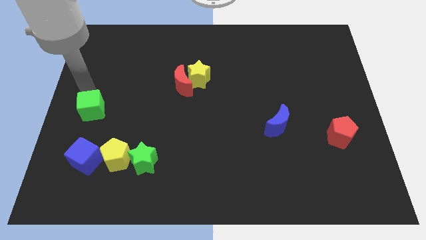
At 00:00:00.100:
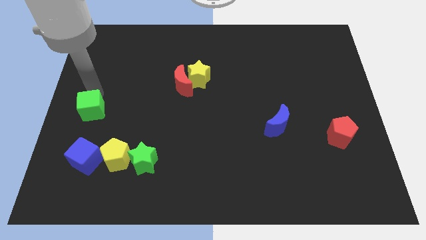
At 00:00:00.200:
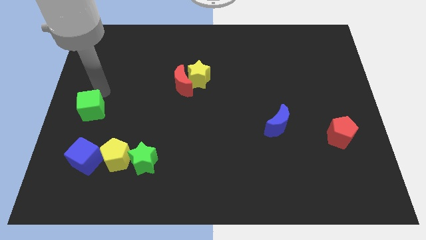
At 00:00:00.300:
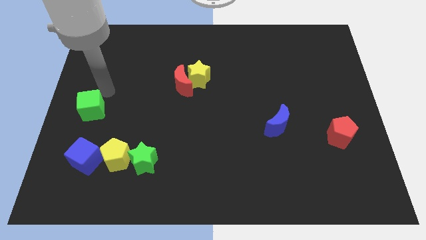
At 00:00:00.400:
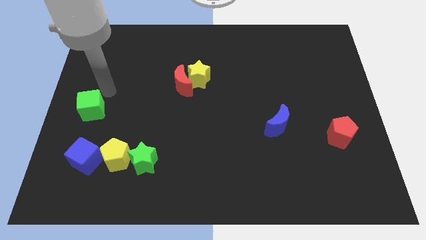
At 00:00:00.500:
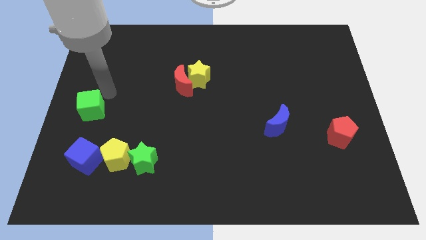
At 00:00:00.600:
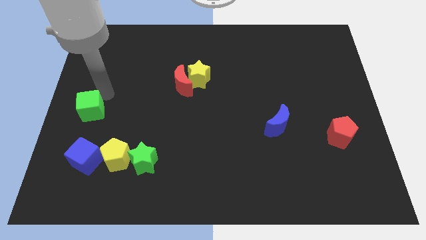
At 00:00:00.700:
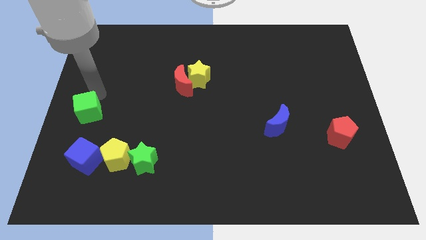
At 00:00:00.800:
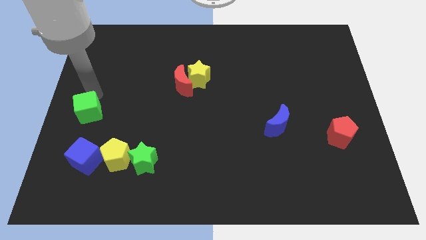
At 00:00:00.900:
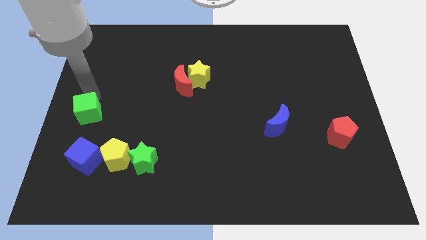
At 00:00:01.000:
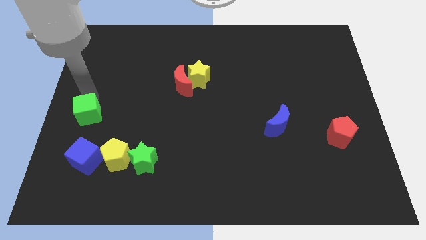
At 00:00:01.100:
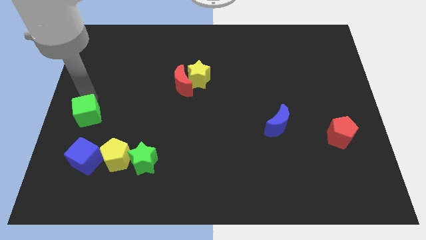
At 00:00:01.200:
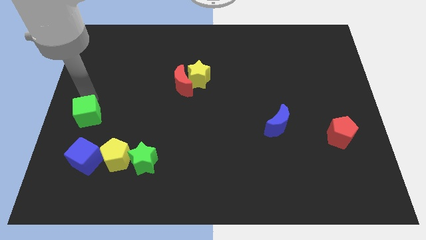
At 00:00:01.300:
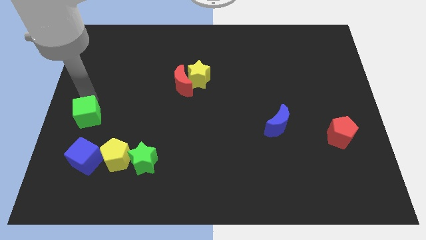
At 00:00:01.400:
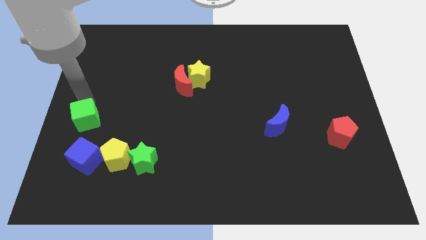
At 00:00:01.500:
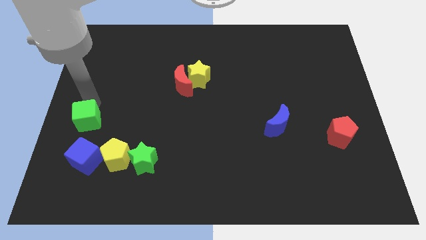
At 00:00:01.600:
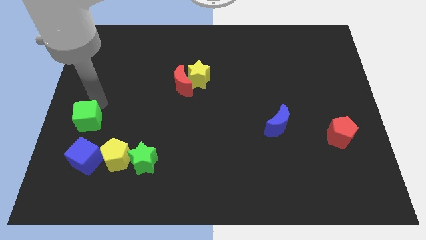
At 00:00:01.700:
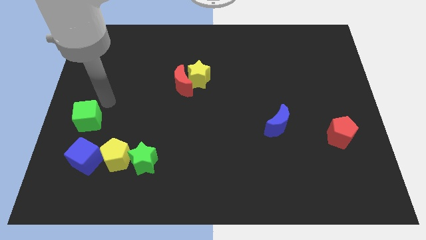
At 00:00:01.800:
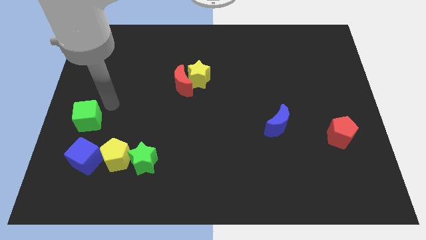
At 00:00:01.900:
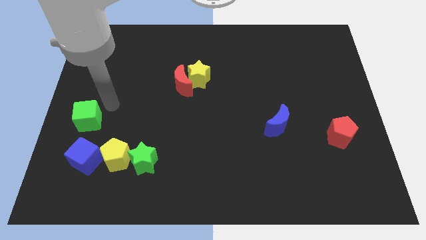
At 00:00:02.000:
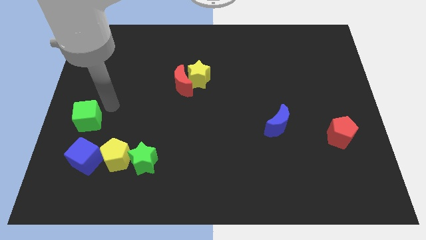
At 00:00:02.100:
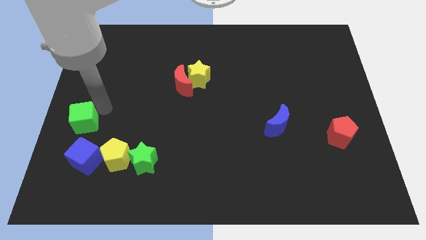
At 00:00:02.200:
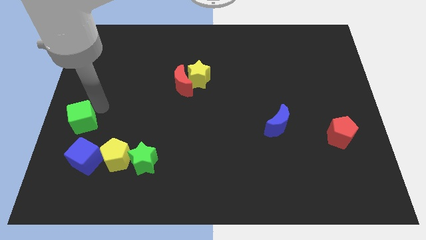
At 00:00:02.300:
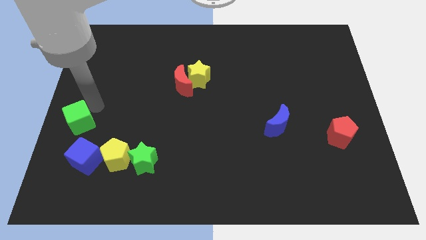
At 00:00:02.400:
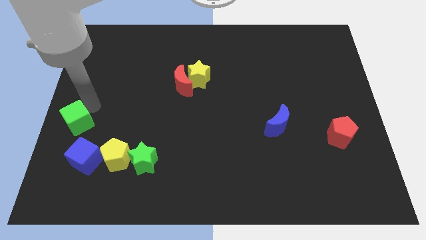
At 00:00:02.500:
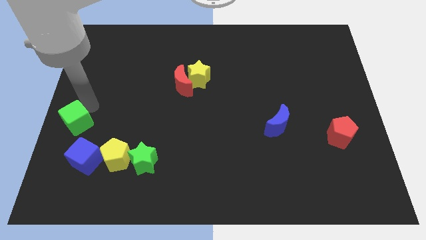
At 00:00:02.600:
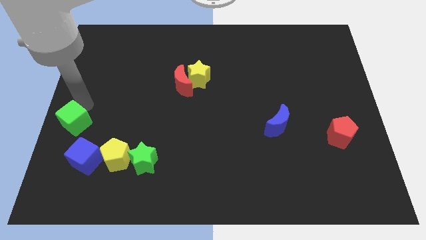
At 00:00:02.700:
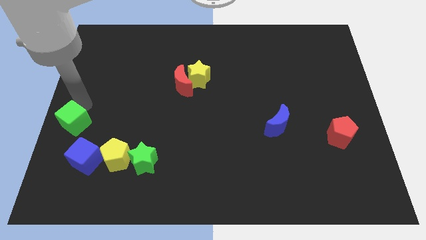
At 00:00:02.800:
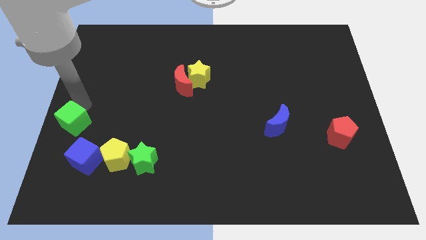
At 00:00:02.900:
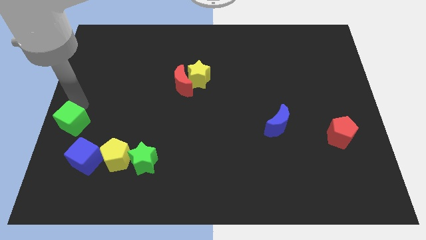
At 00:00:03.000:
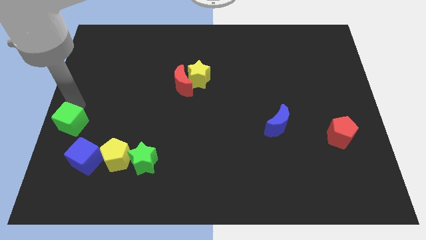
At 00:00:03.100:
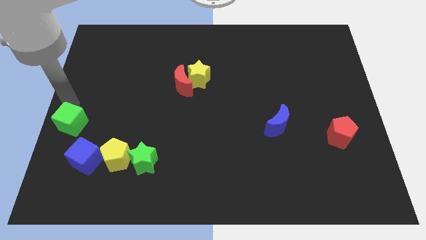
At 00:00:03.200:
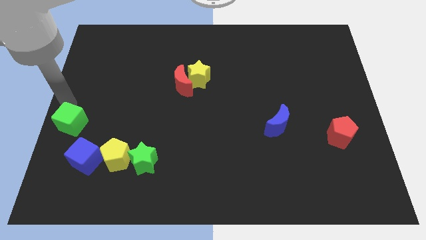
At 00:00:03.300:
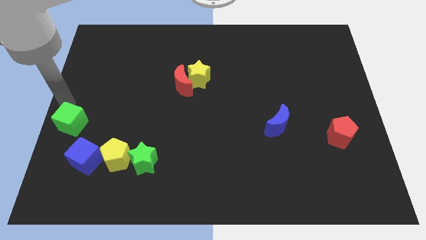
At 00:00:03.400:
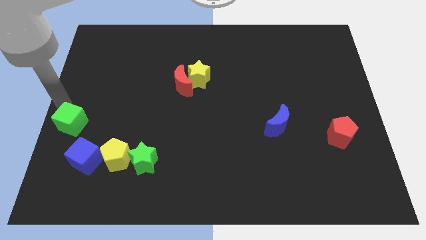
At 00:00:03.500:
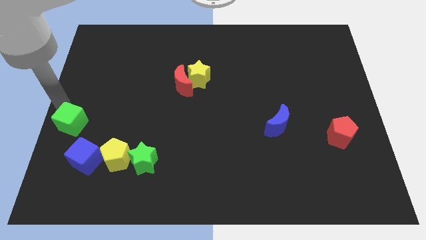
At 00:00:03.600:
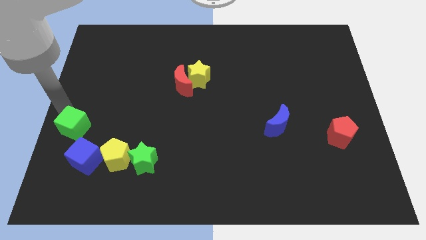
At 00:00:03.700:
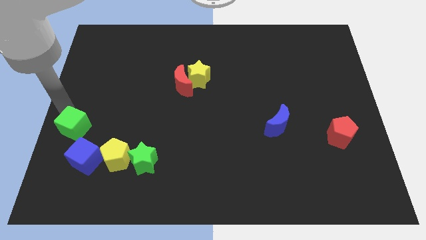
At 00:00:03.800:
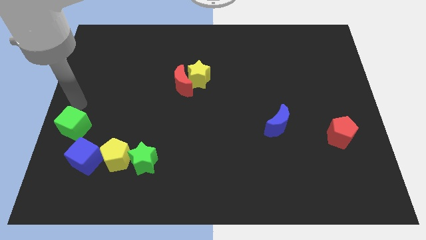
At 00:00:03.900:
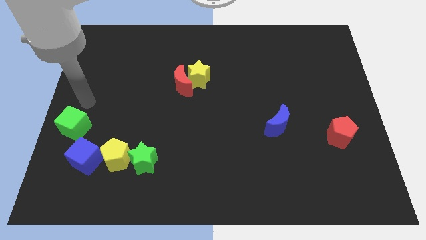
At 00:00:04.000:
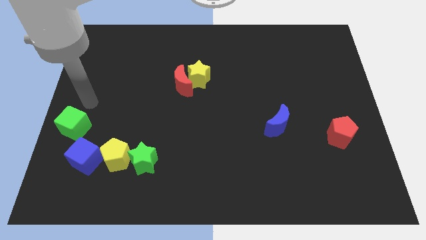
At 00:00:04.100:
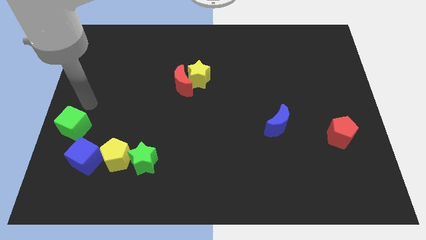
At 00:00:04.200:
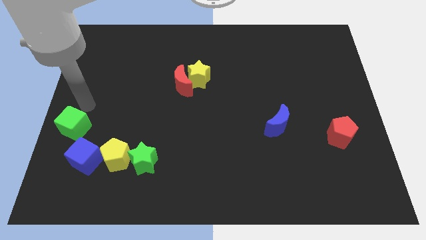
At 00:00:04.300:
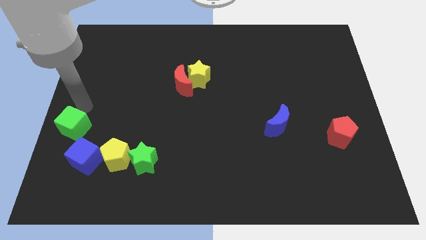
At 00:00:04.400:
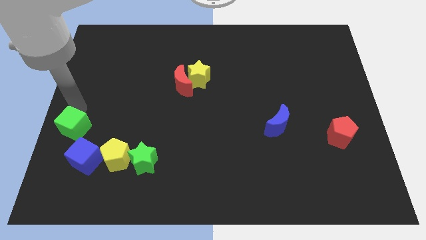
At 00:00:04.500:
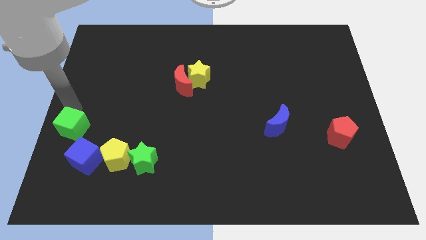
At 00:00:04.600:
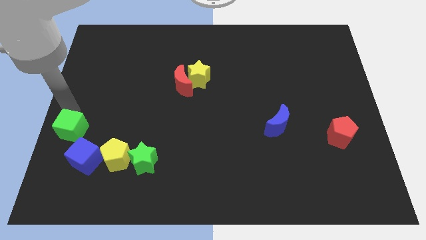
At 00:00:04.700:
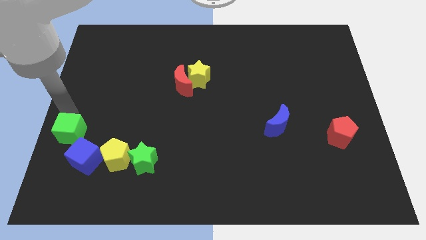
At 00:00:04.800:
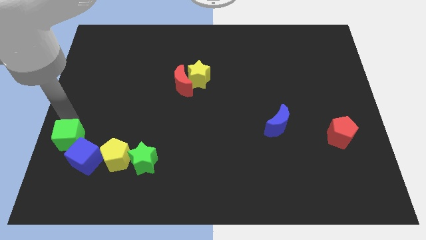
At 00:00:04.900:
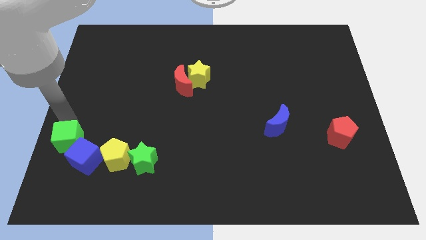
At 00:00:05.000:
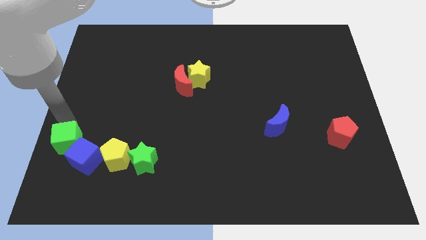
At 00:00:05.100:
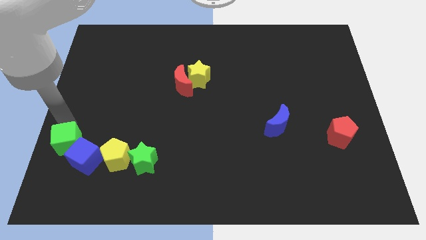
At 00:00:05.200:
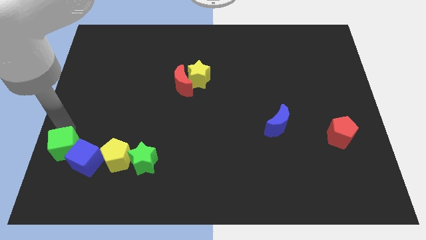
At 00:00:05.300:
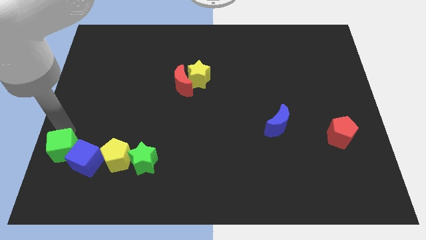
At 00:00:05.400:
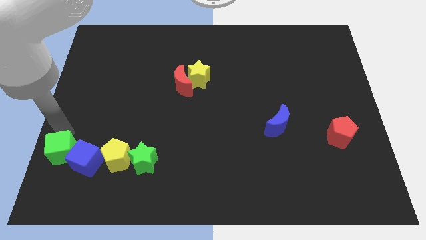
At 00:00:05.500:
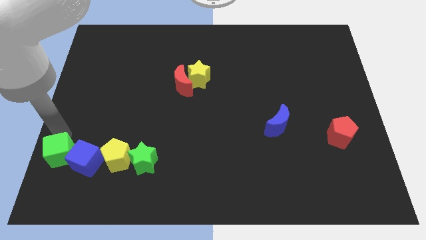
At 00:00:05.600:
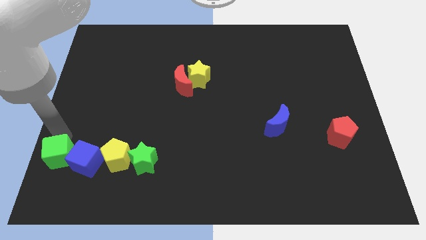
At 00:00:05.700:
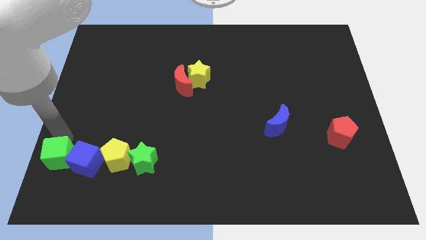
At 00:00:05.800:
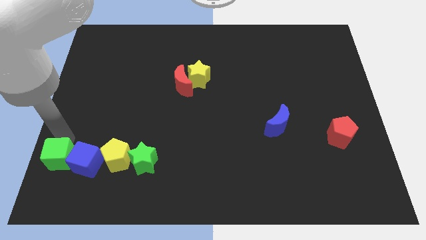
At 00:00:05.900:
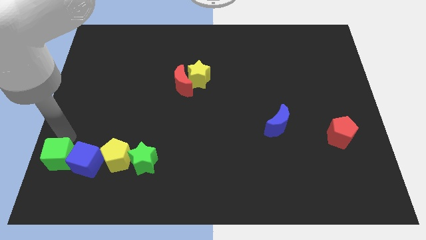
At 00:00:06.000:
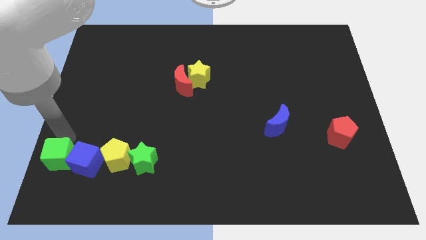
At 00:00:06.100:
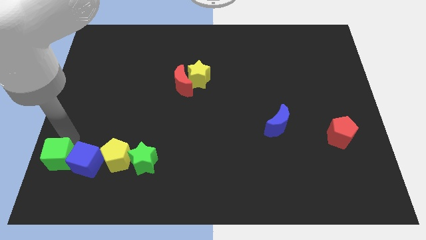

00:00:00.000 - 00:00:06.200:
place the green cube to the left of the blue cube

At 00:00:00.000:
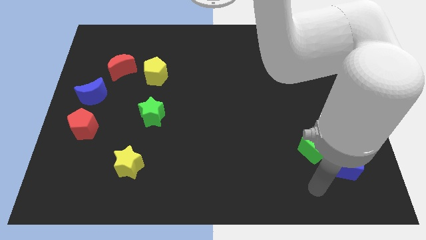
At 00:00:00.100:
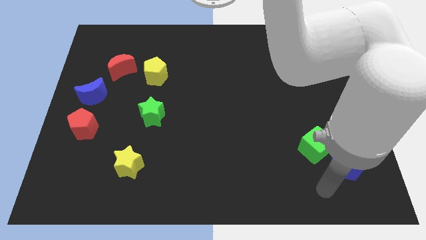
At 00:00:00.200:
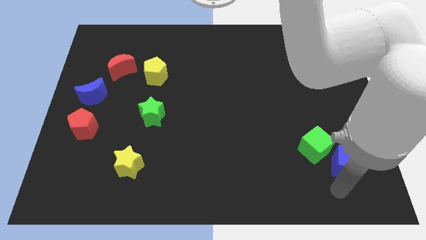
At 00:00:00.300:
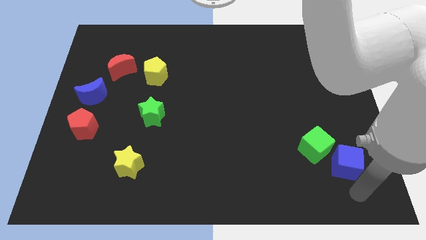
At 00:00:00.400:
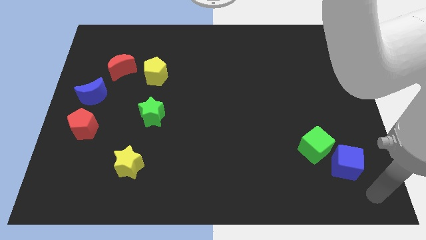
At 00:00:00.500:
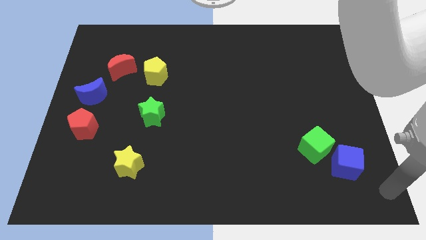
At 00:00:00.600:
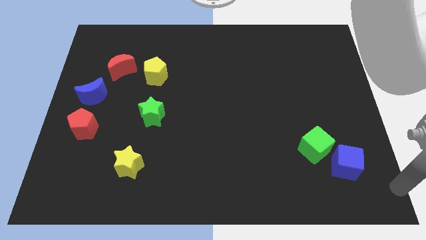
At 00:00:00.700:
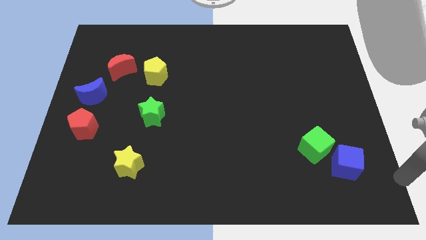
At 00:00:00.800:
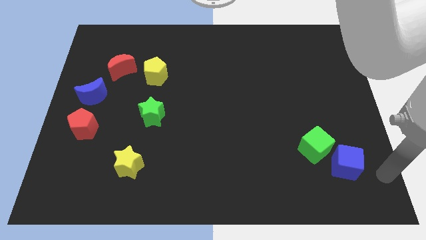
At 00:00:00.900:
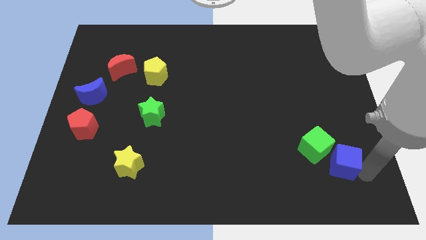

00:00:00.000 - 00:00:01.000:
point your arm to the right side of blue cube

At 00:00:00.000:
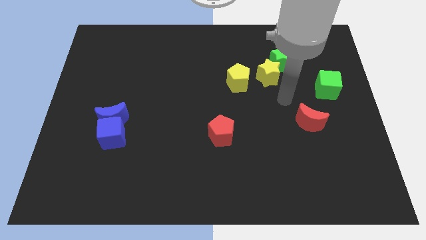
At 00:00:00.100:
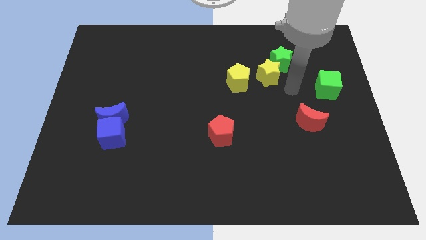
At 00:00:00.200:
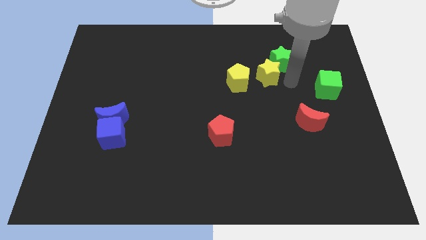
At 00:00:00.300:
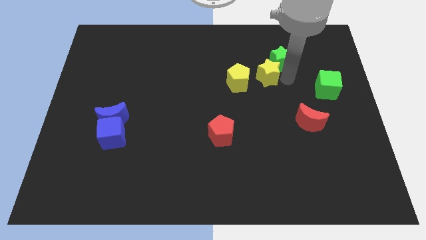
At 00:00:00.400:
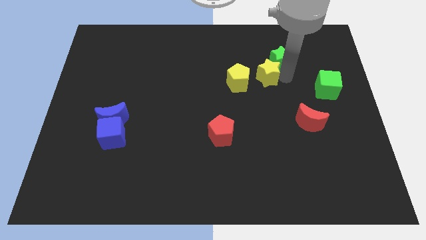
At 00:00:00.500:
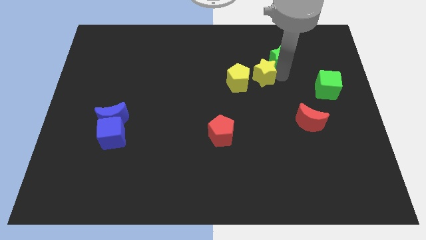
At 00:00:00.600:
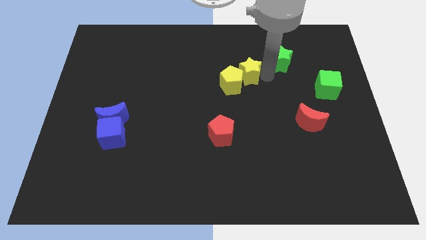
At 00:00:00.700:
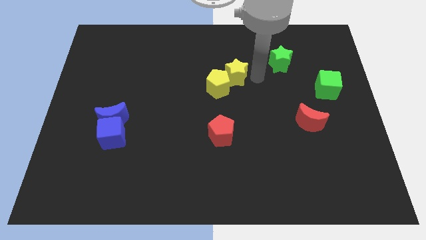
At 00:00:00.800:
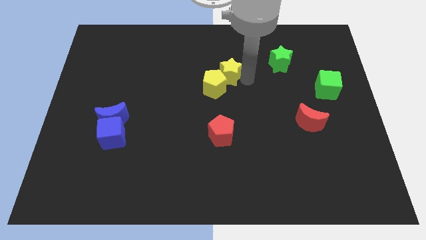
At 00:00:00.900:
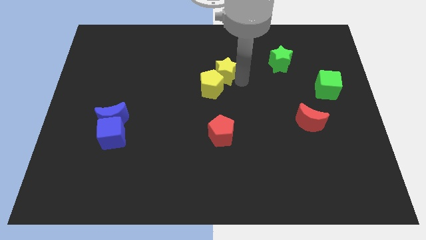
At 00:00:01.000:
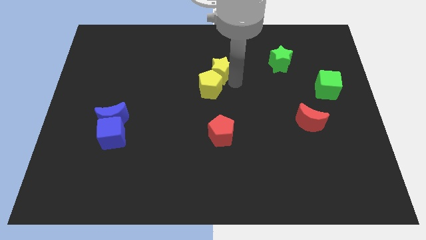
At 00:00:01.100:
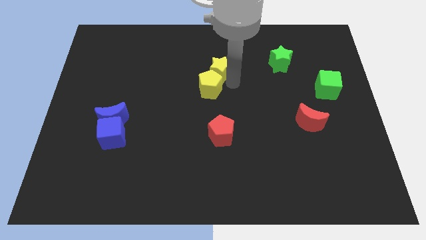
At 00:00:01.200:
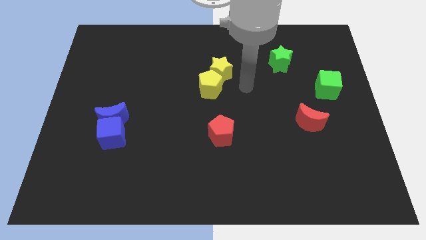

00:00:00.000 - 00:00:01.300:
place both the yellow blocks to the top side of the red pentagon

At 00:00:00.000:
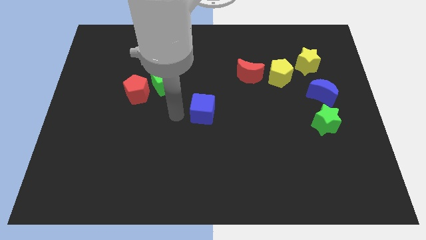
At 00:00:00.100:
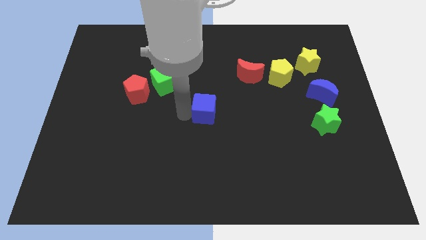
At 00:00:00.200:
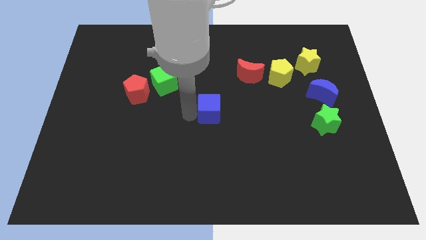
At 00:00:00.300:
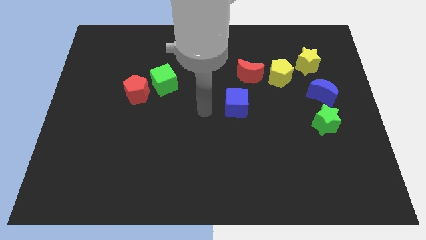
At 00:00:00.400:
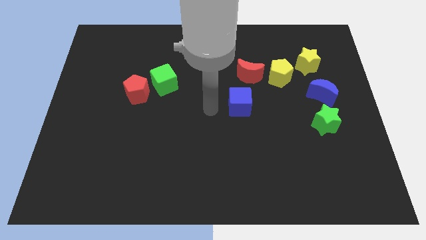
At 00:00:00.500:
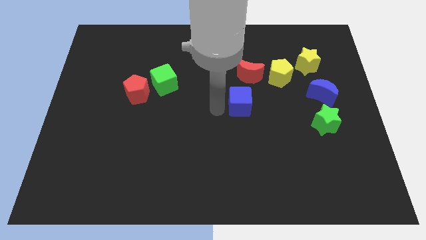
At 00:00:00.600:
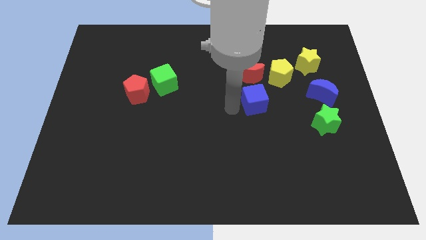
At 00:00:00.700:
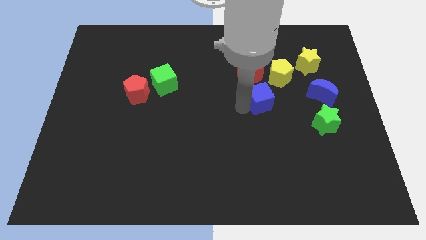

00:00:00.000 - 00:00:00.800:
push the blue cube towards blue moon
